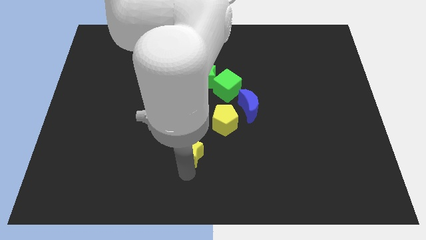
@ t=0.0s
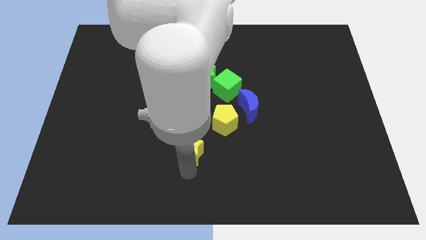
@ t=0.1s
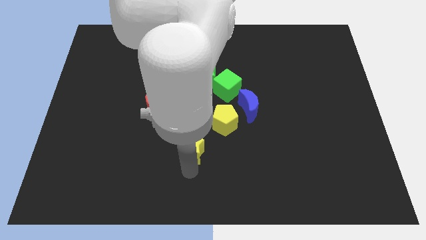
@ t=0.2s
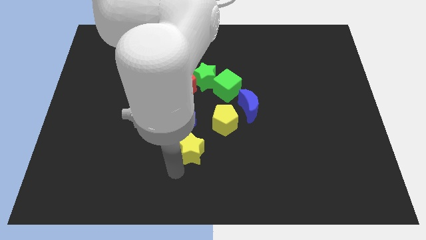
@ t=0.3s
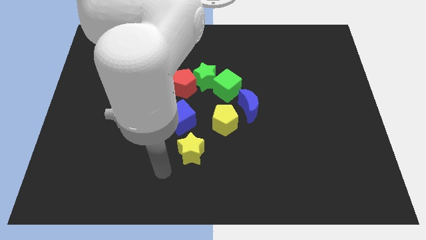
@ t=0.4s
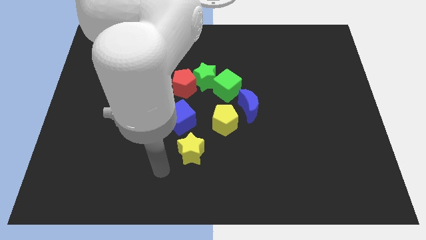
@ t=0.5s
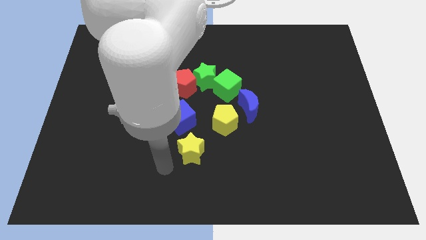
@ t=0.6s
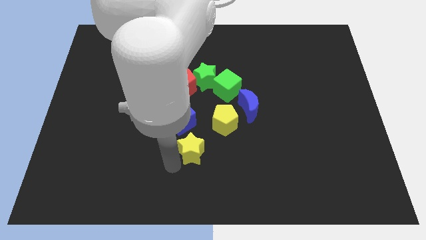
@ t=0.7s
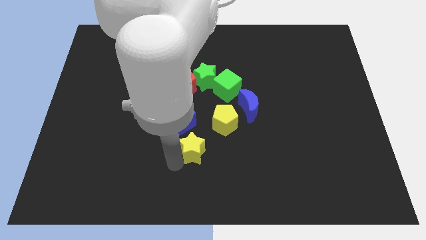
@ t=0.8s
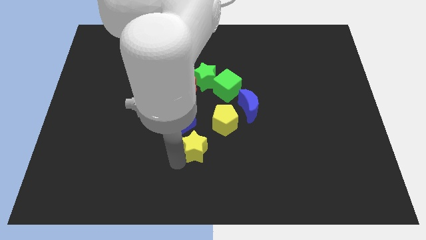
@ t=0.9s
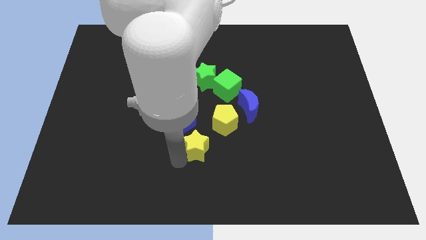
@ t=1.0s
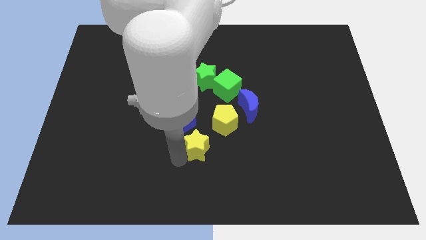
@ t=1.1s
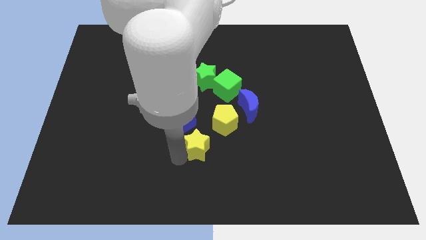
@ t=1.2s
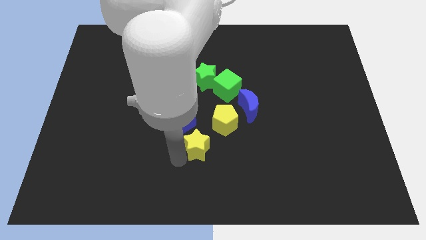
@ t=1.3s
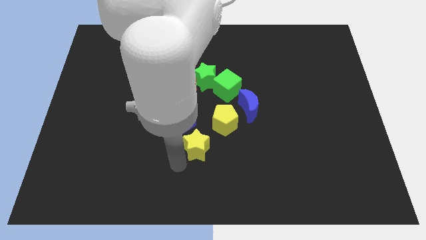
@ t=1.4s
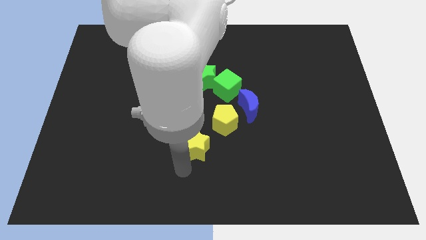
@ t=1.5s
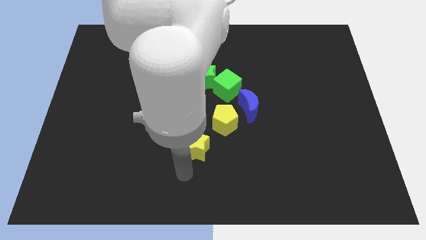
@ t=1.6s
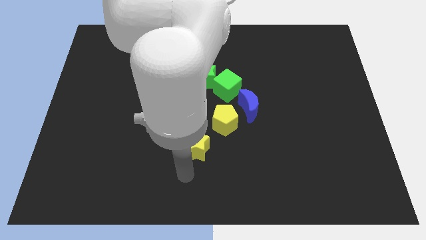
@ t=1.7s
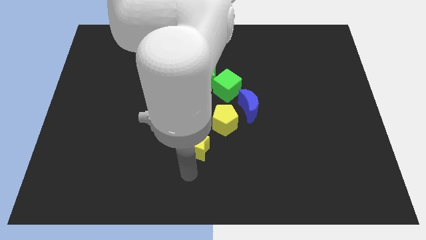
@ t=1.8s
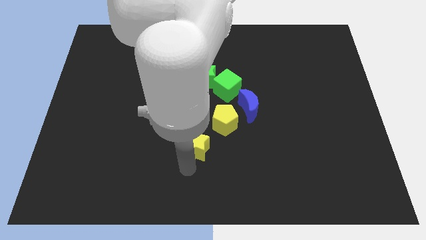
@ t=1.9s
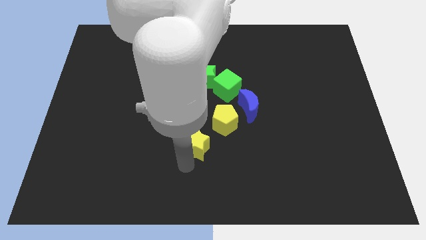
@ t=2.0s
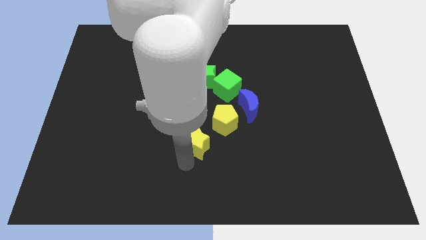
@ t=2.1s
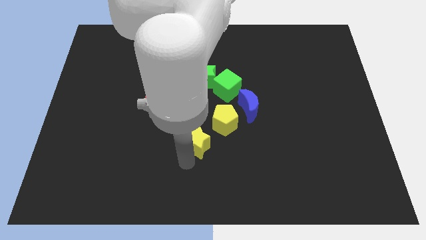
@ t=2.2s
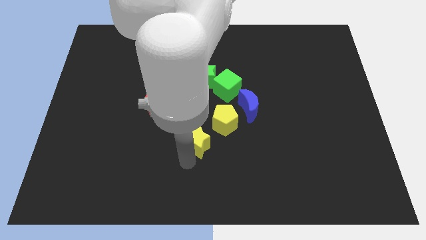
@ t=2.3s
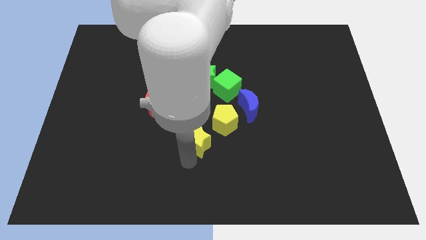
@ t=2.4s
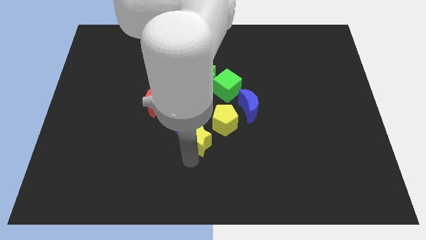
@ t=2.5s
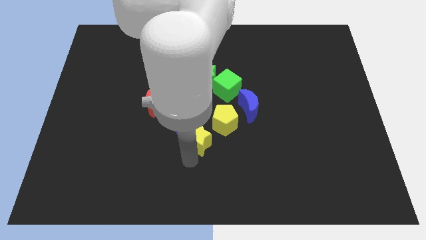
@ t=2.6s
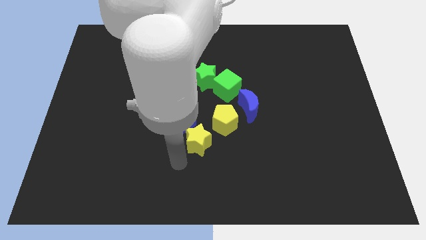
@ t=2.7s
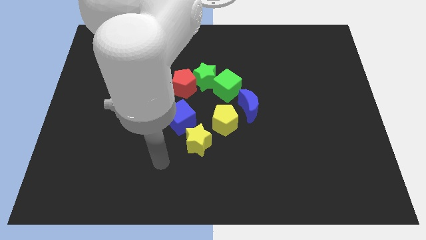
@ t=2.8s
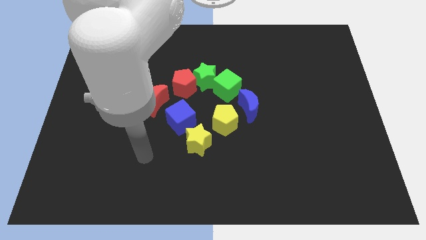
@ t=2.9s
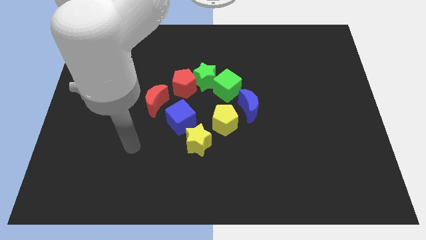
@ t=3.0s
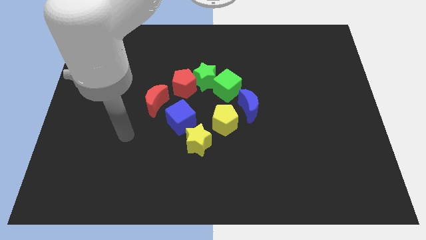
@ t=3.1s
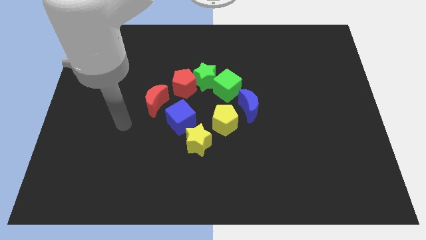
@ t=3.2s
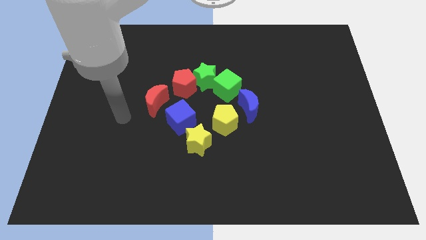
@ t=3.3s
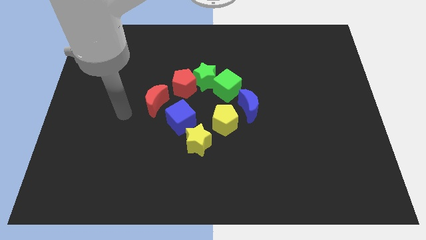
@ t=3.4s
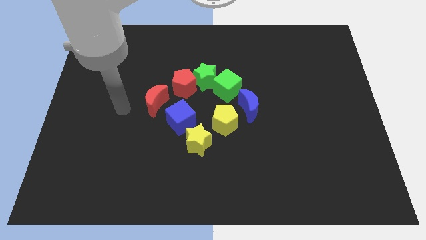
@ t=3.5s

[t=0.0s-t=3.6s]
move the yellow star close to the blue cube

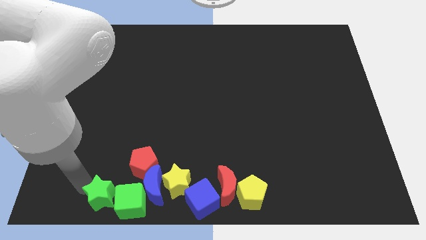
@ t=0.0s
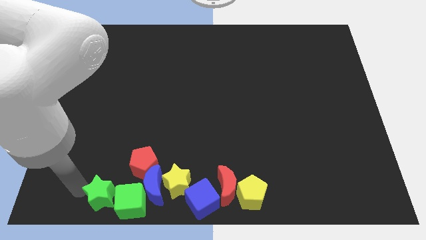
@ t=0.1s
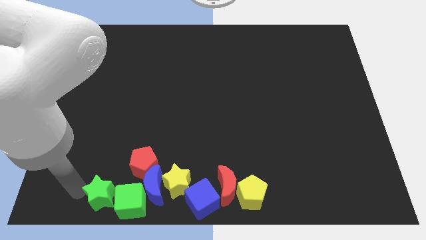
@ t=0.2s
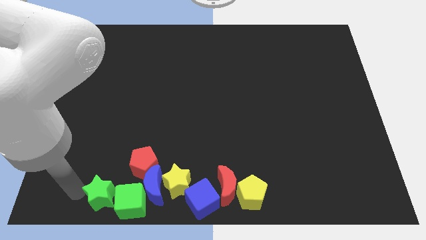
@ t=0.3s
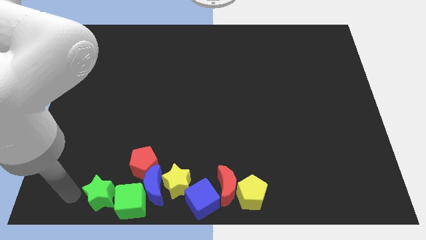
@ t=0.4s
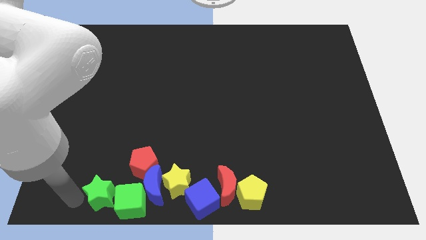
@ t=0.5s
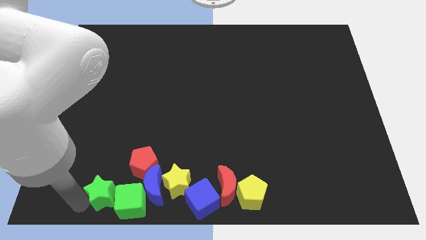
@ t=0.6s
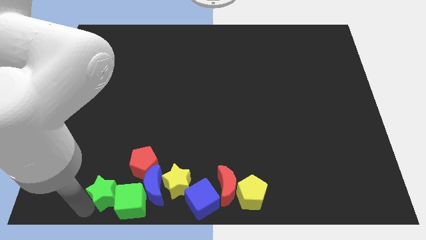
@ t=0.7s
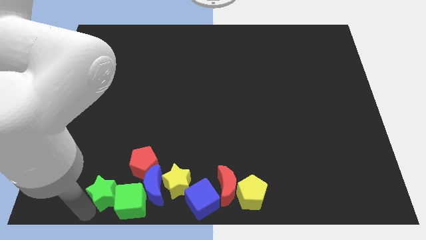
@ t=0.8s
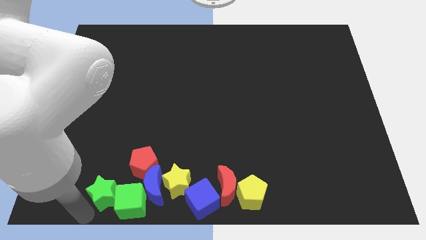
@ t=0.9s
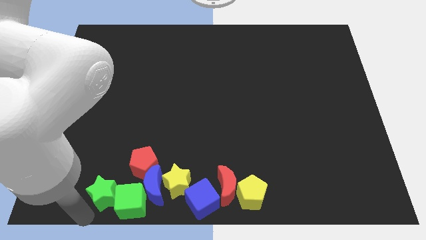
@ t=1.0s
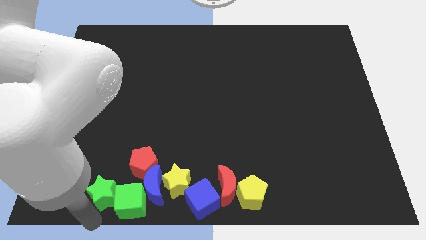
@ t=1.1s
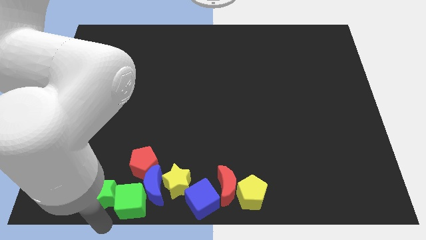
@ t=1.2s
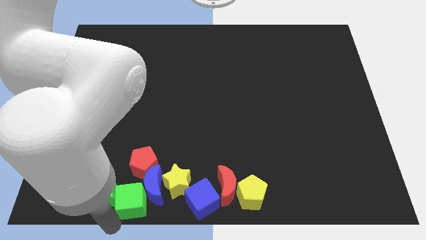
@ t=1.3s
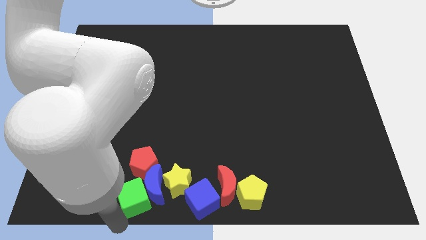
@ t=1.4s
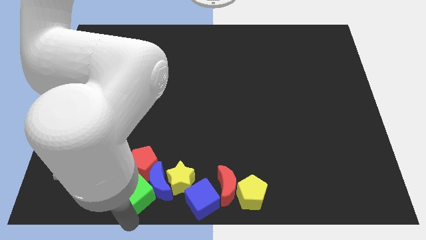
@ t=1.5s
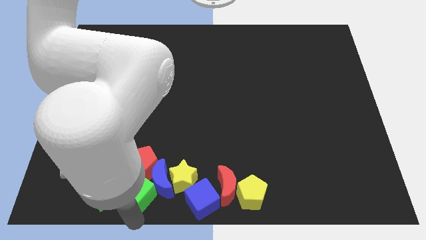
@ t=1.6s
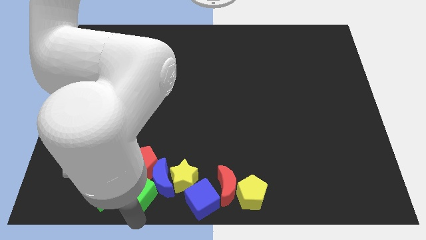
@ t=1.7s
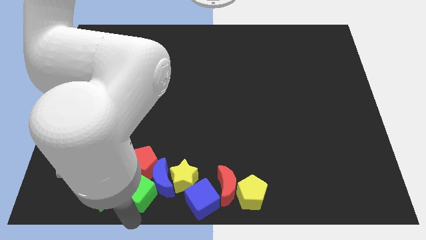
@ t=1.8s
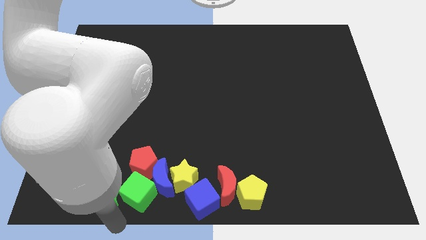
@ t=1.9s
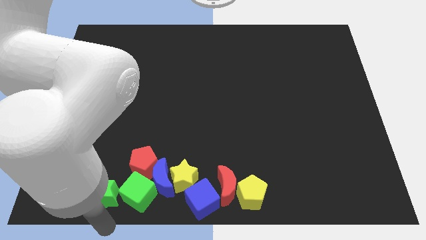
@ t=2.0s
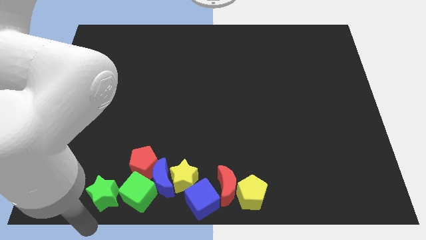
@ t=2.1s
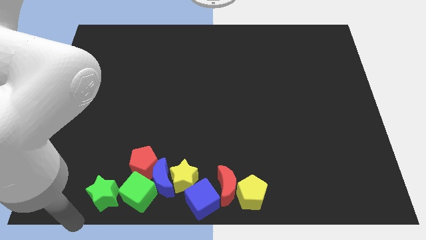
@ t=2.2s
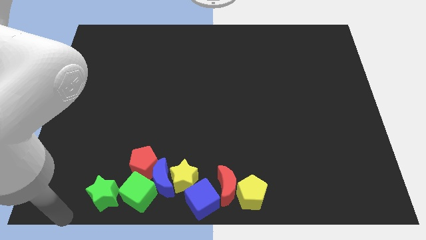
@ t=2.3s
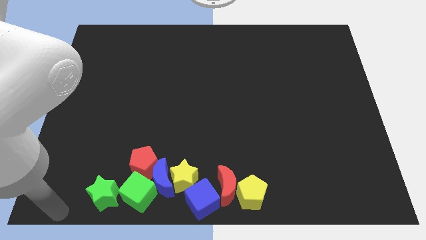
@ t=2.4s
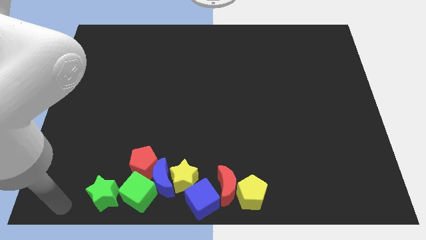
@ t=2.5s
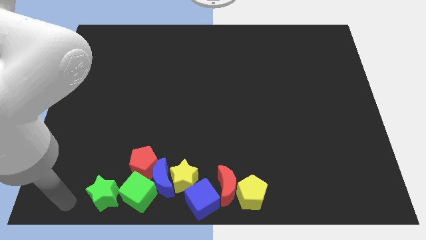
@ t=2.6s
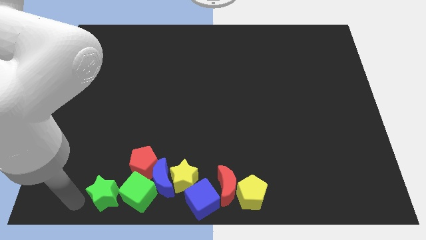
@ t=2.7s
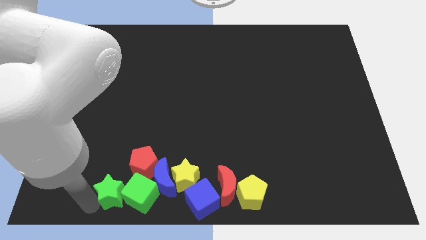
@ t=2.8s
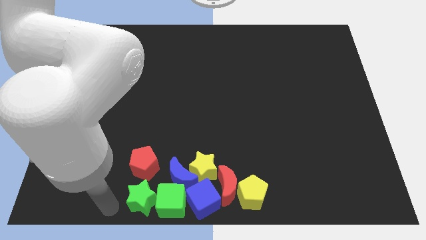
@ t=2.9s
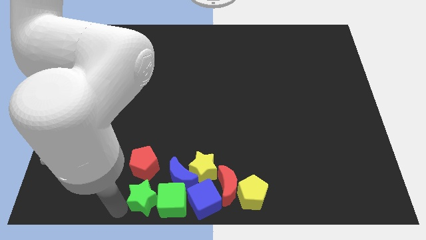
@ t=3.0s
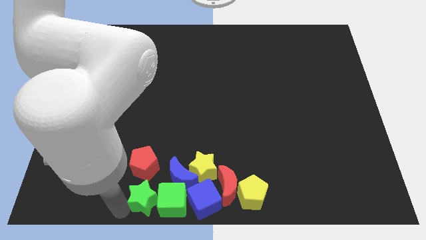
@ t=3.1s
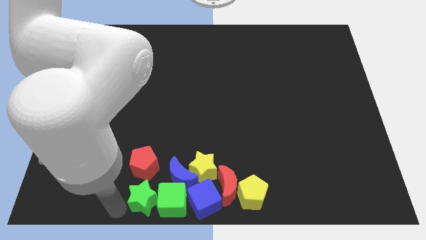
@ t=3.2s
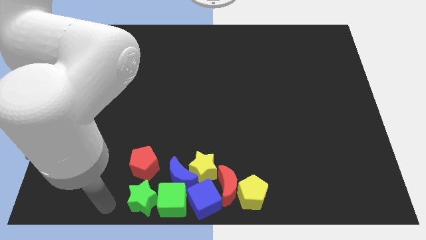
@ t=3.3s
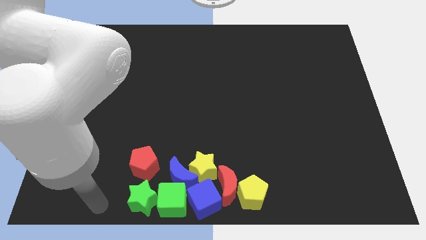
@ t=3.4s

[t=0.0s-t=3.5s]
move the green blocks to the right

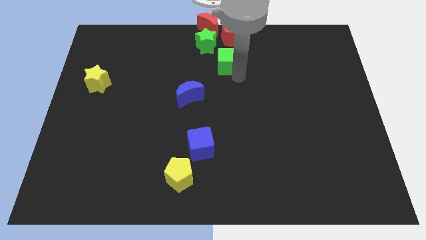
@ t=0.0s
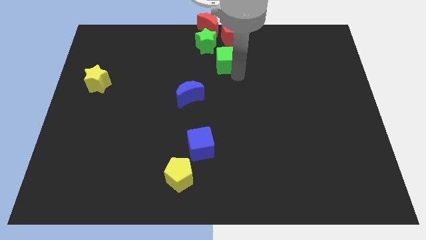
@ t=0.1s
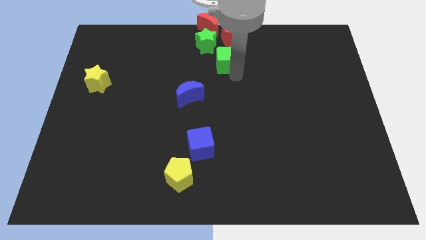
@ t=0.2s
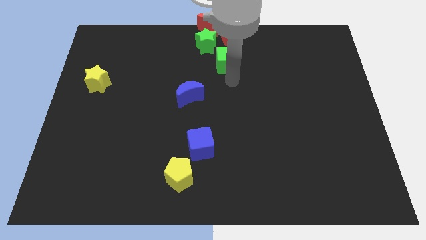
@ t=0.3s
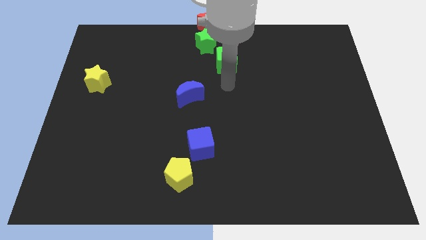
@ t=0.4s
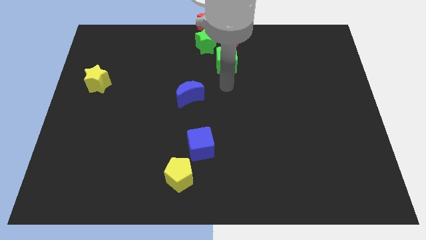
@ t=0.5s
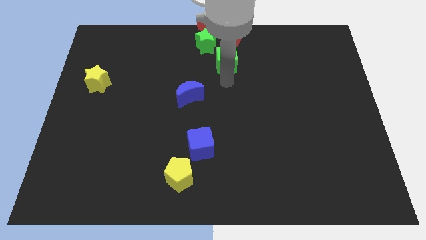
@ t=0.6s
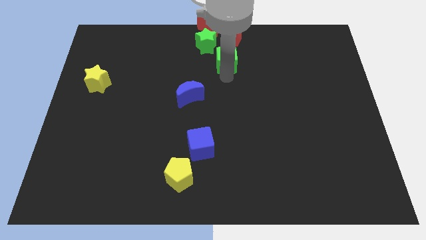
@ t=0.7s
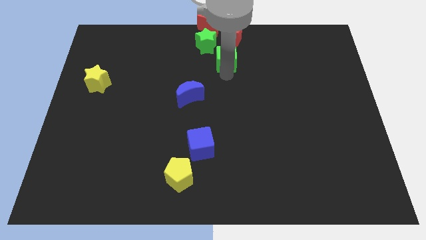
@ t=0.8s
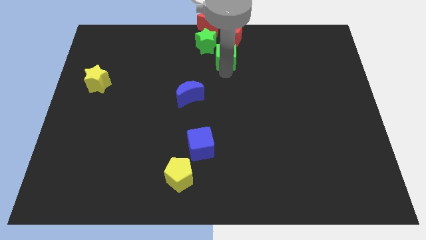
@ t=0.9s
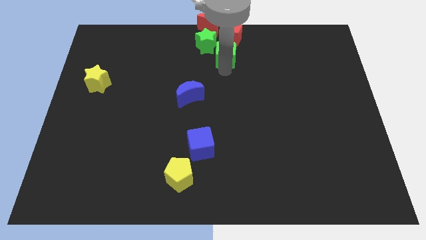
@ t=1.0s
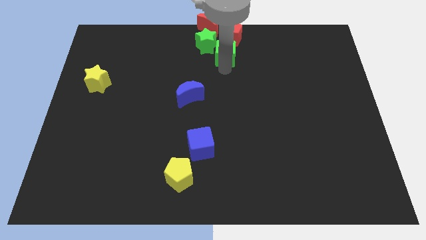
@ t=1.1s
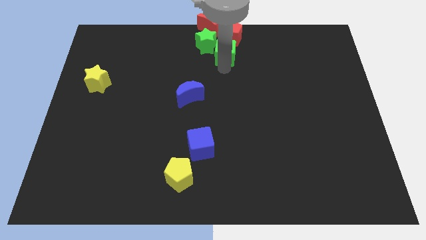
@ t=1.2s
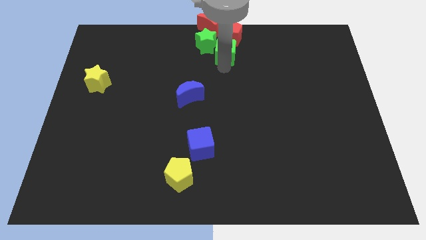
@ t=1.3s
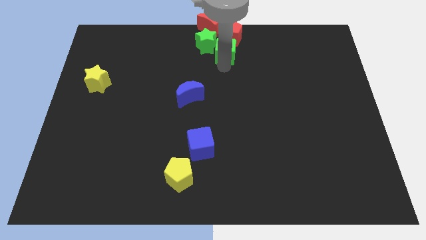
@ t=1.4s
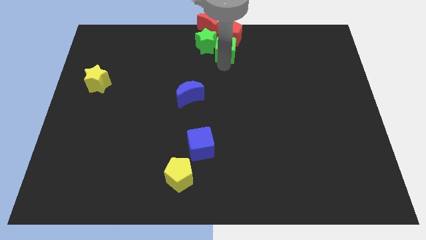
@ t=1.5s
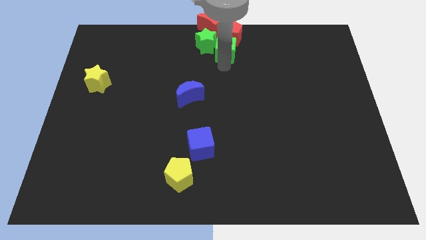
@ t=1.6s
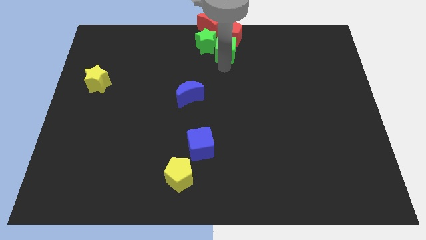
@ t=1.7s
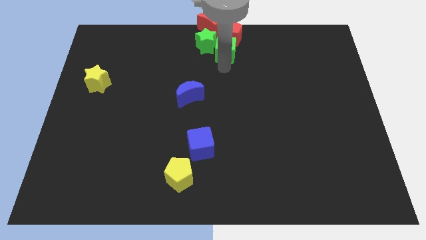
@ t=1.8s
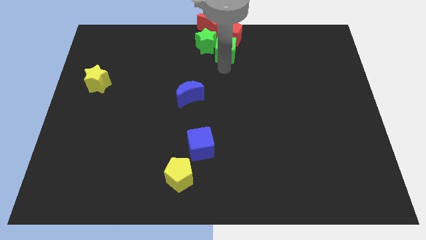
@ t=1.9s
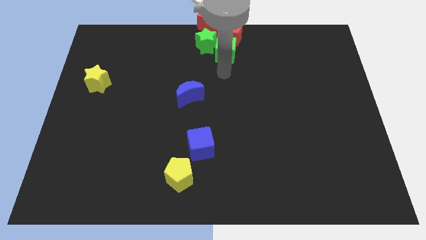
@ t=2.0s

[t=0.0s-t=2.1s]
place the green cube under the red pentagon
